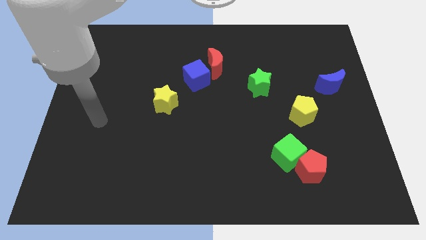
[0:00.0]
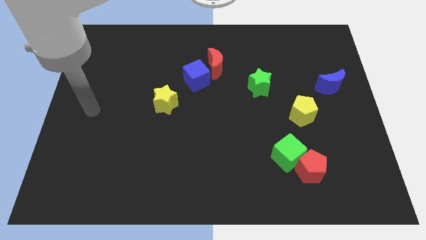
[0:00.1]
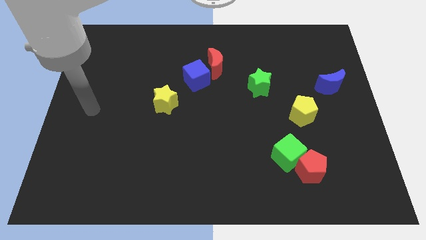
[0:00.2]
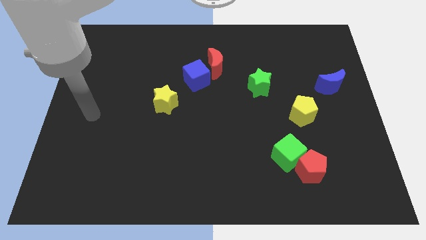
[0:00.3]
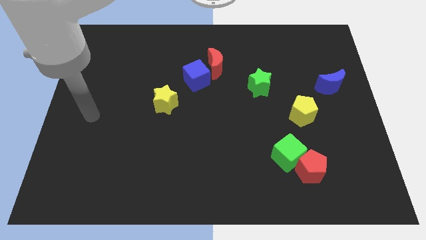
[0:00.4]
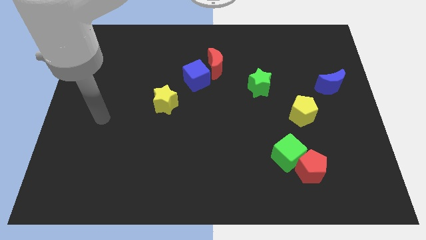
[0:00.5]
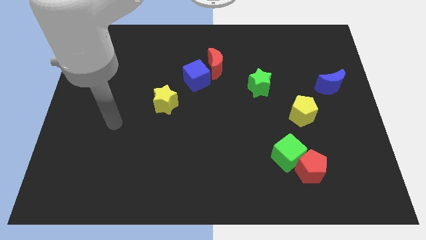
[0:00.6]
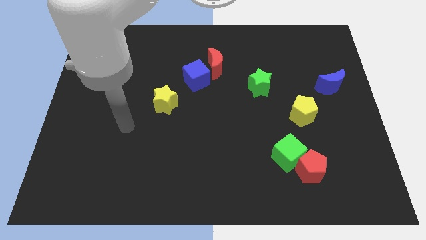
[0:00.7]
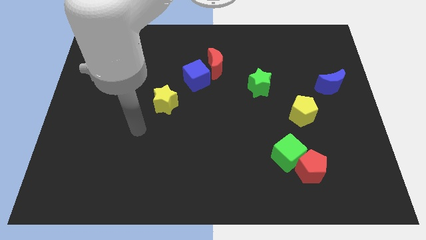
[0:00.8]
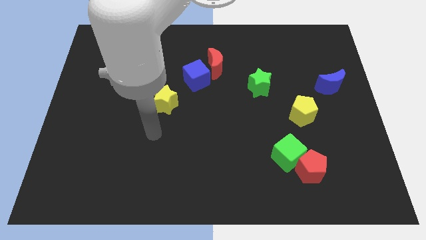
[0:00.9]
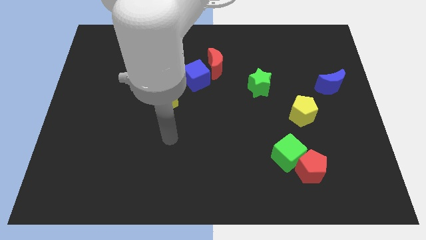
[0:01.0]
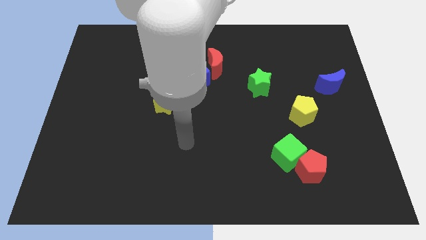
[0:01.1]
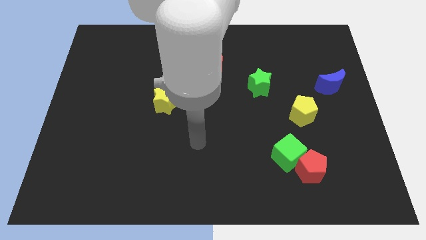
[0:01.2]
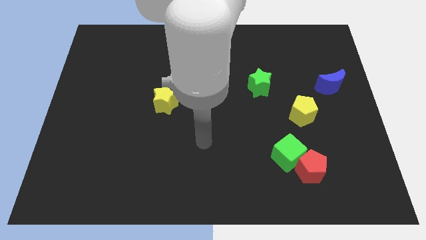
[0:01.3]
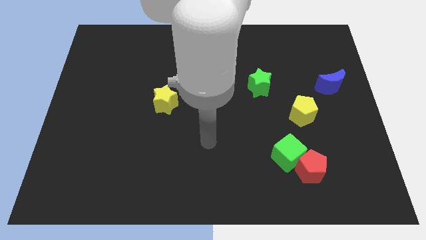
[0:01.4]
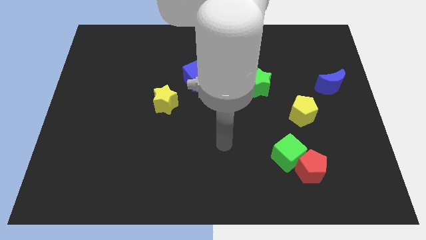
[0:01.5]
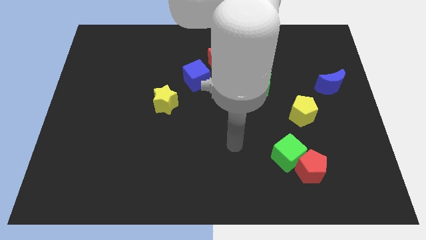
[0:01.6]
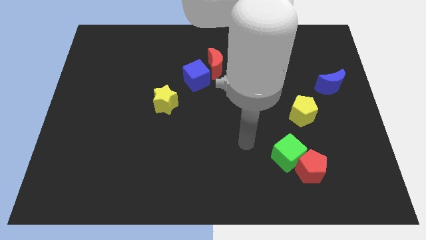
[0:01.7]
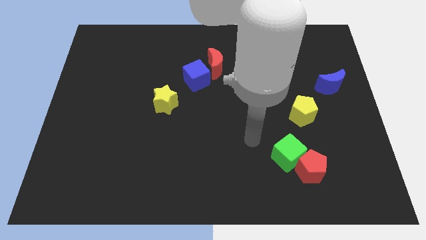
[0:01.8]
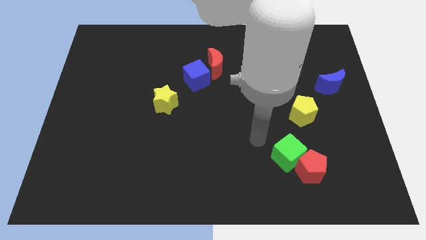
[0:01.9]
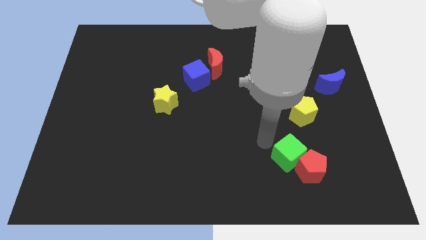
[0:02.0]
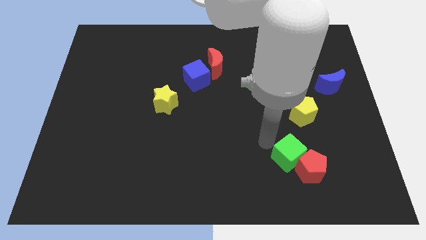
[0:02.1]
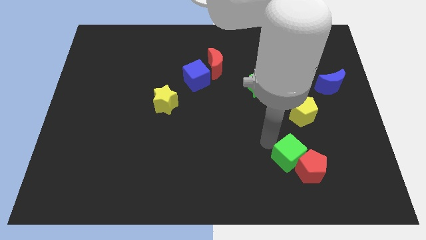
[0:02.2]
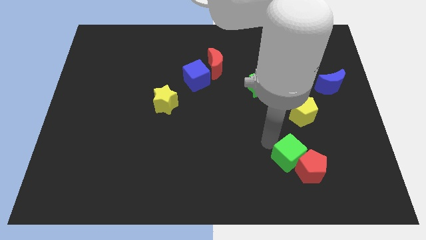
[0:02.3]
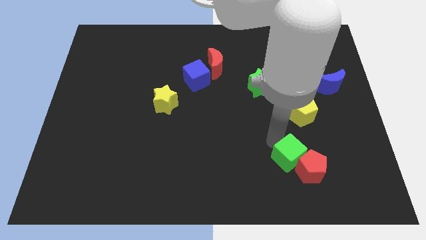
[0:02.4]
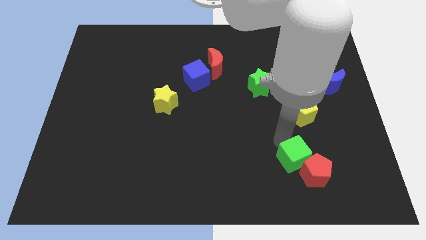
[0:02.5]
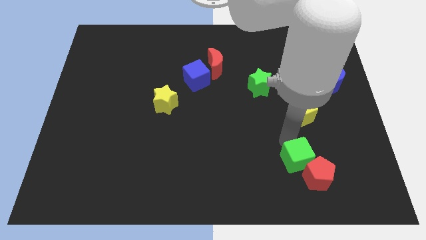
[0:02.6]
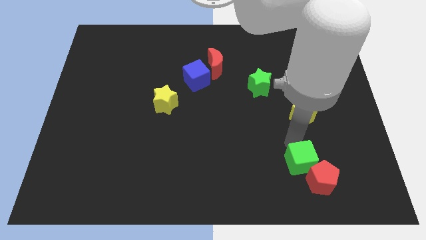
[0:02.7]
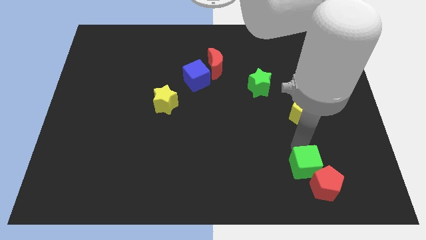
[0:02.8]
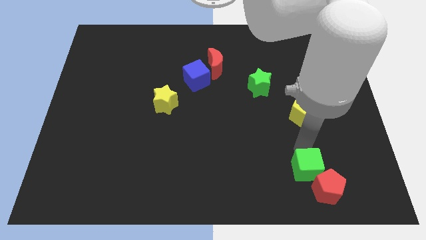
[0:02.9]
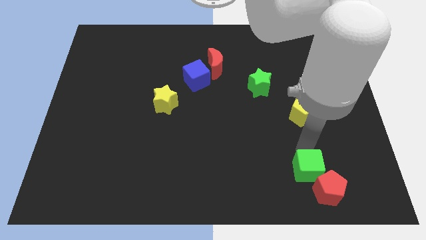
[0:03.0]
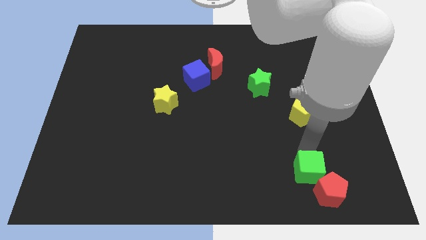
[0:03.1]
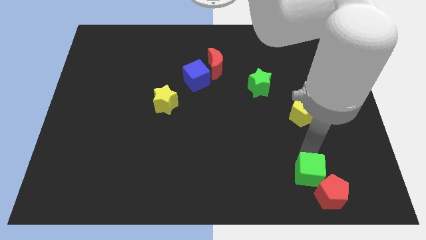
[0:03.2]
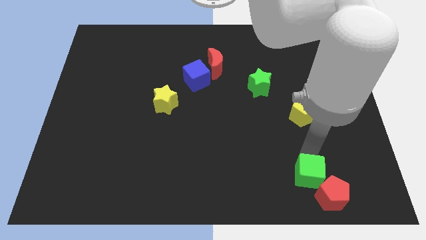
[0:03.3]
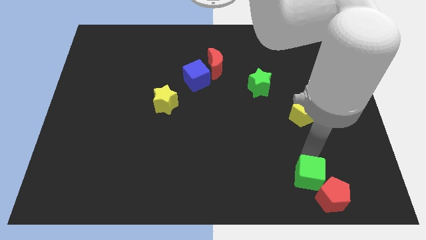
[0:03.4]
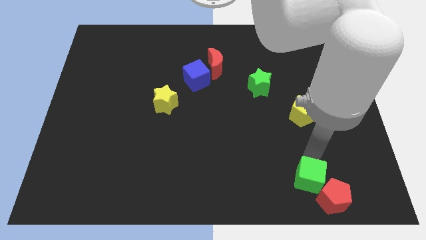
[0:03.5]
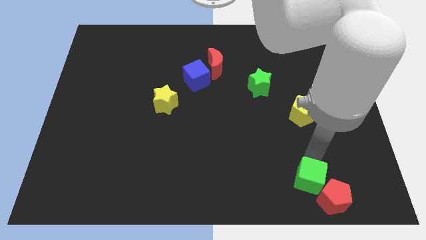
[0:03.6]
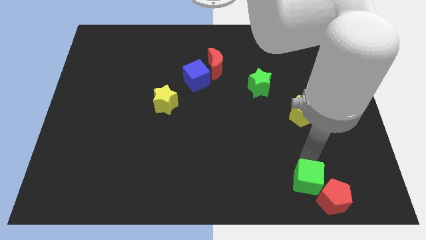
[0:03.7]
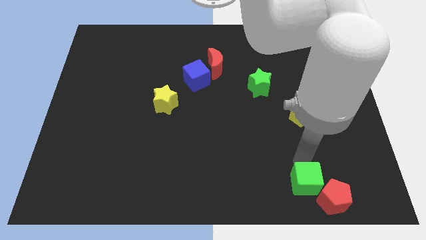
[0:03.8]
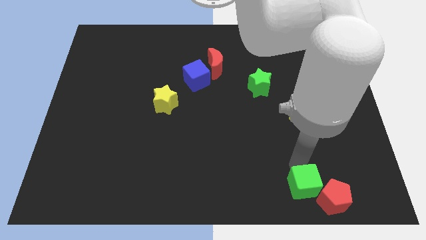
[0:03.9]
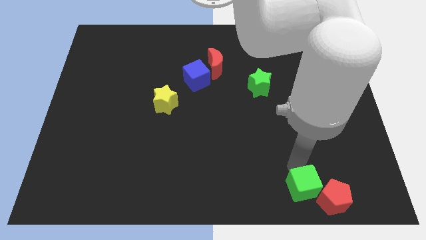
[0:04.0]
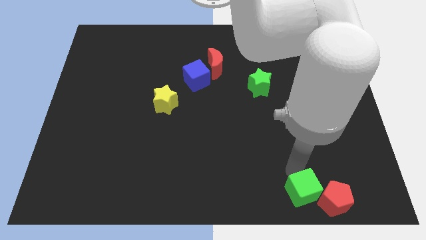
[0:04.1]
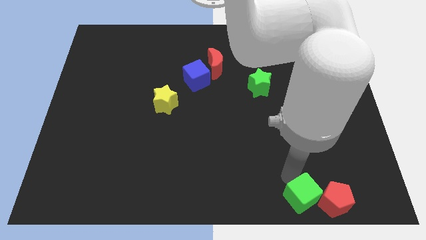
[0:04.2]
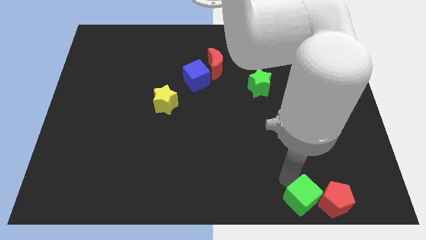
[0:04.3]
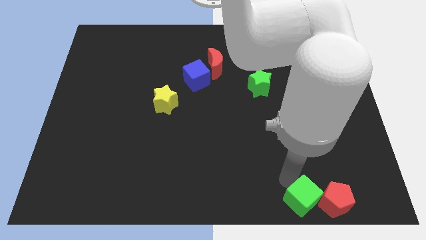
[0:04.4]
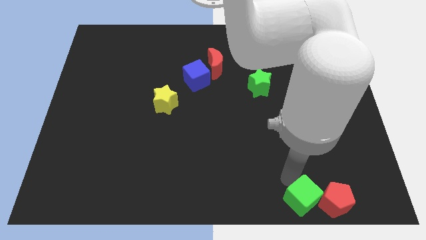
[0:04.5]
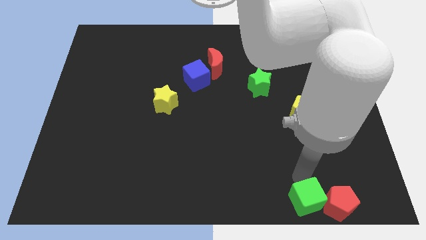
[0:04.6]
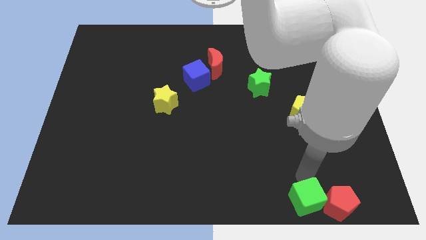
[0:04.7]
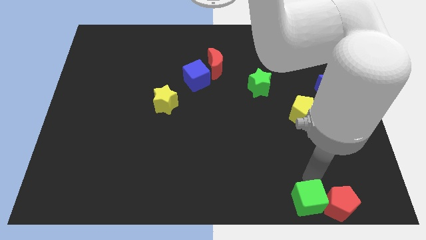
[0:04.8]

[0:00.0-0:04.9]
push green cube and red pentagon downward

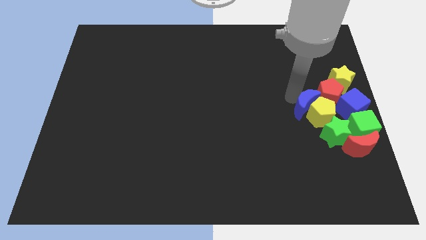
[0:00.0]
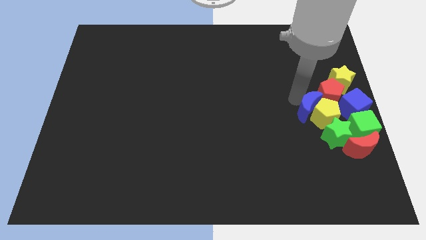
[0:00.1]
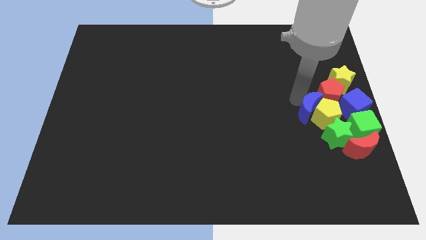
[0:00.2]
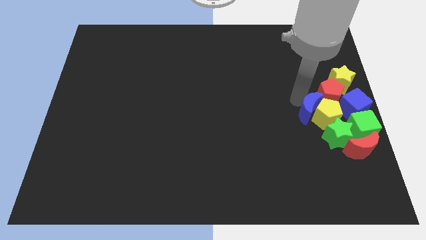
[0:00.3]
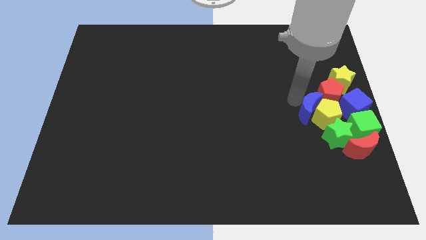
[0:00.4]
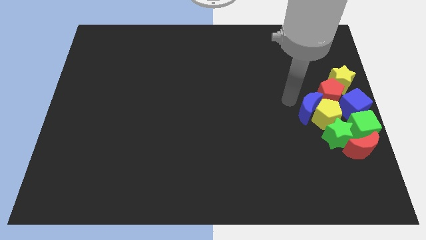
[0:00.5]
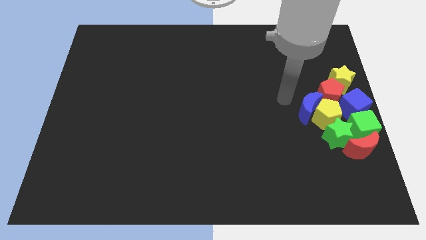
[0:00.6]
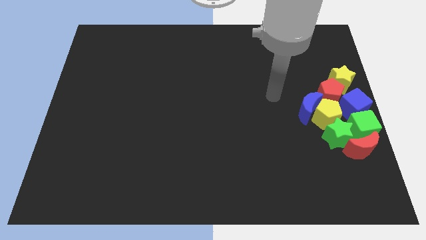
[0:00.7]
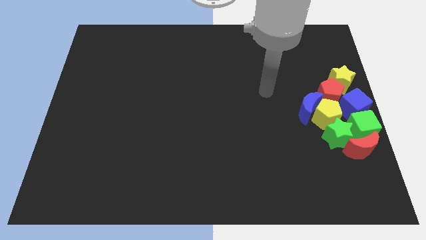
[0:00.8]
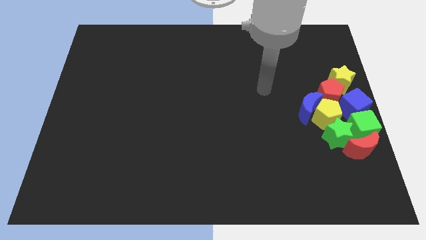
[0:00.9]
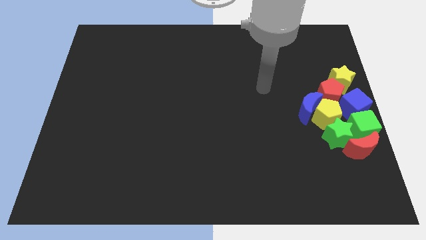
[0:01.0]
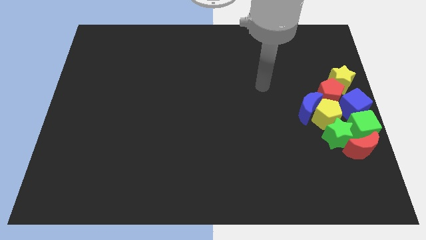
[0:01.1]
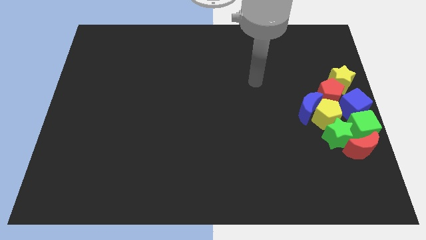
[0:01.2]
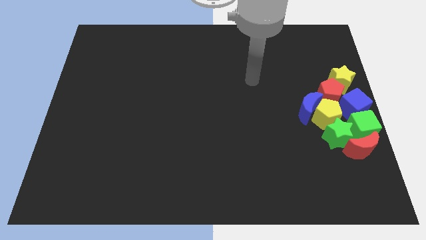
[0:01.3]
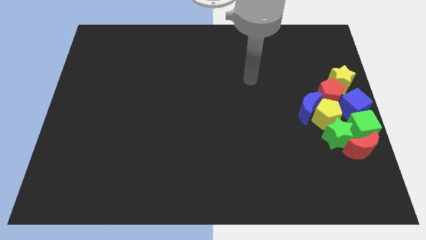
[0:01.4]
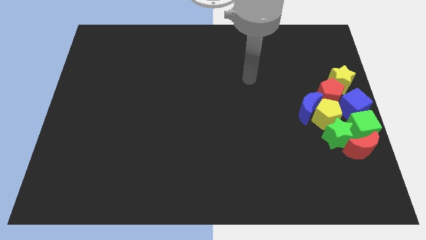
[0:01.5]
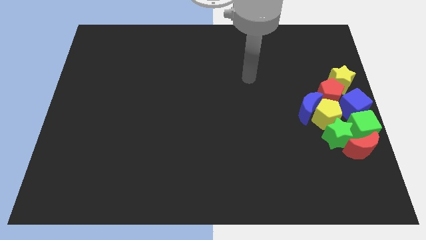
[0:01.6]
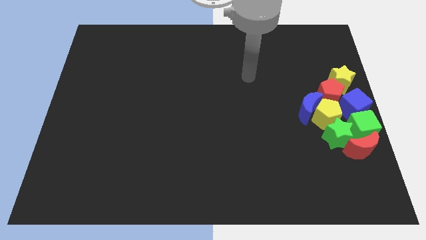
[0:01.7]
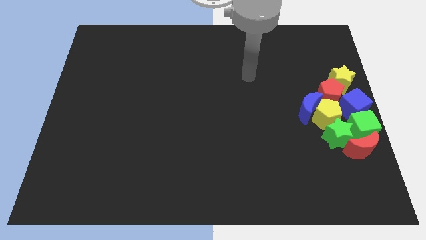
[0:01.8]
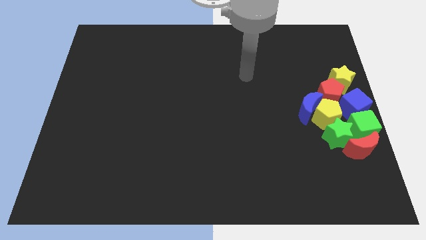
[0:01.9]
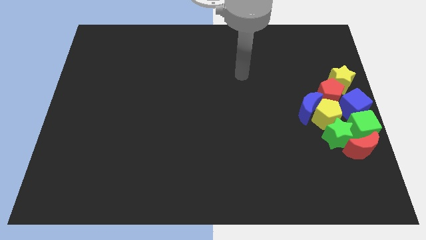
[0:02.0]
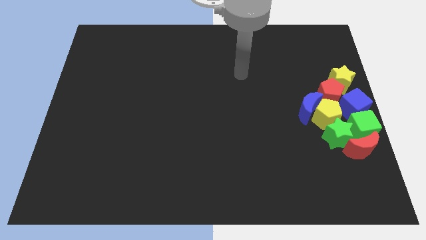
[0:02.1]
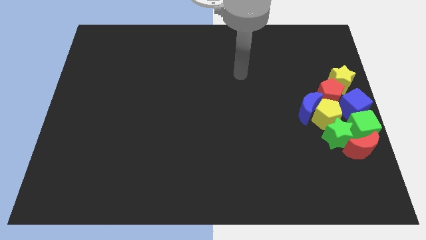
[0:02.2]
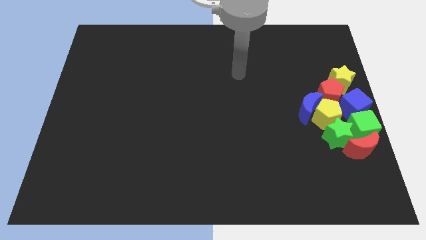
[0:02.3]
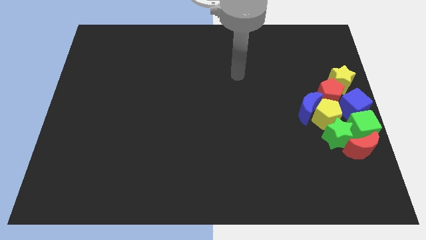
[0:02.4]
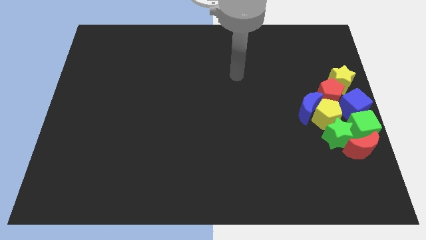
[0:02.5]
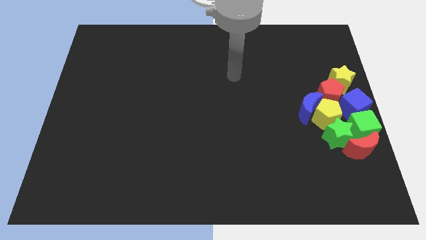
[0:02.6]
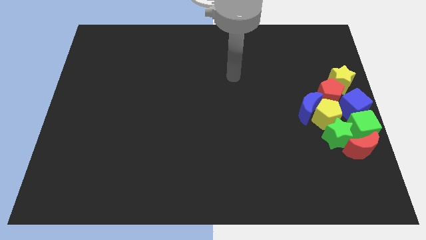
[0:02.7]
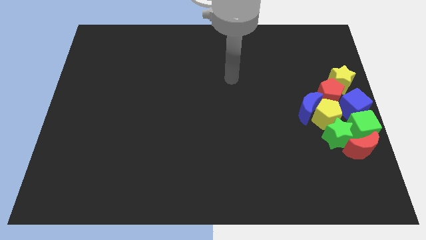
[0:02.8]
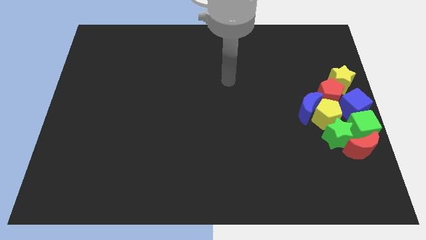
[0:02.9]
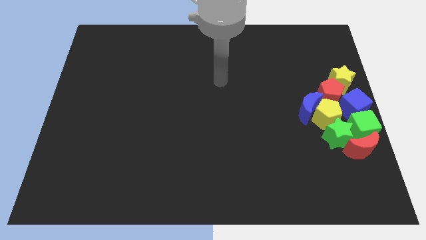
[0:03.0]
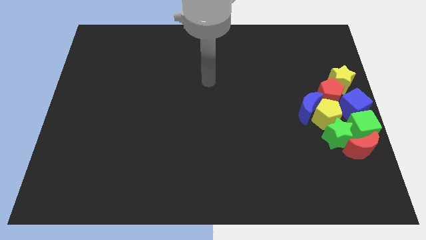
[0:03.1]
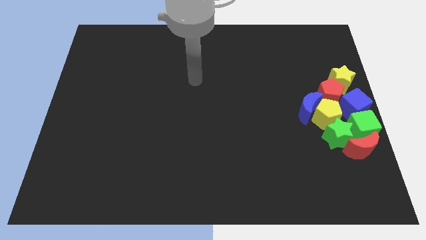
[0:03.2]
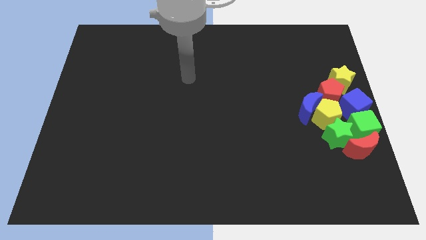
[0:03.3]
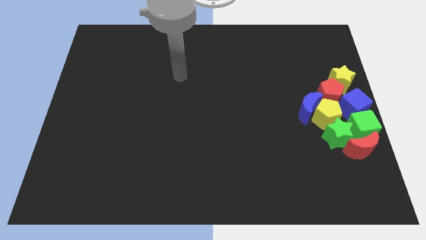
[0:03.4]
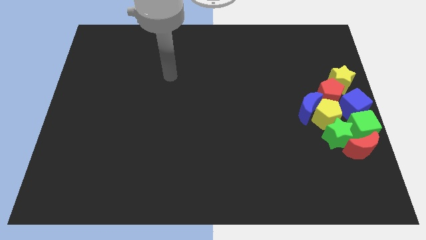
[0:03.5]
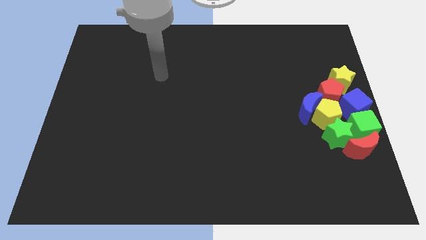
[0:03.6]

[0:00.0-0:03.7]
move the arm away from the blue moon

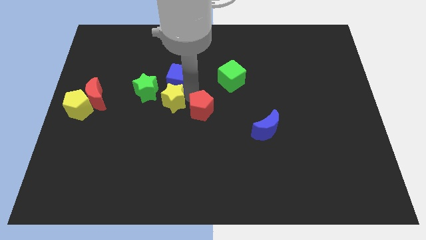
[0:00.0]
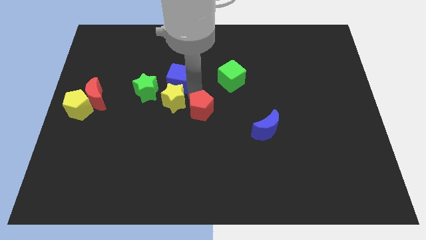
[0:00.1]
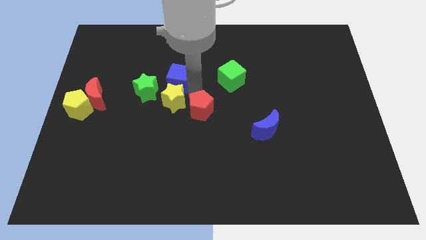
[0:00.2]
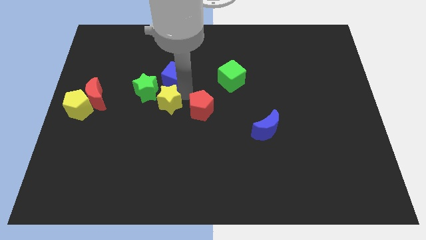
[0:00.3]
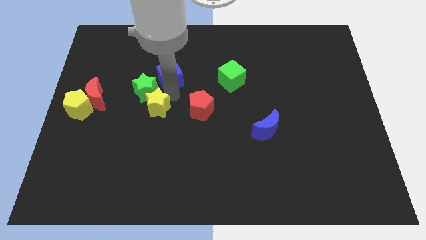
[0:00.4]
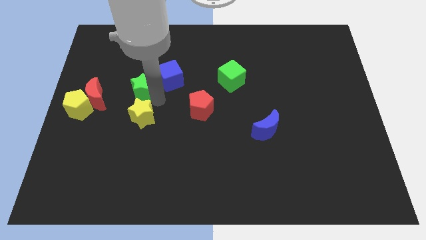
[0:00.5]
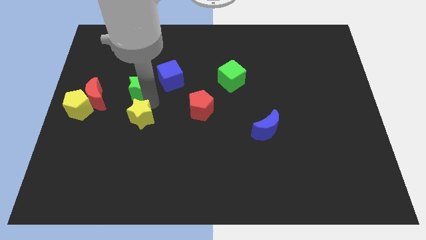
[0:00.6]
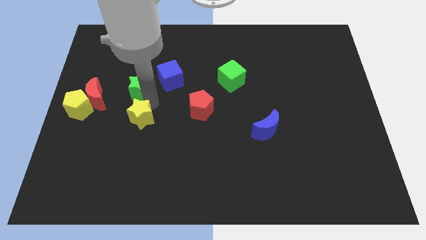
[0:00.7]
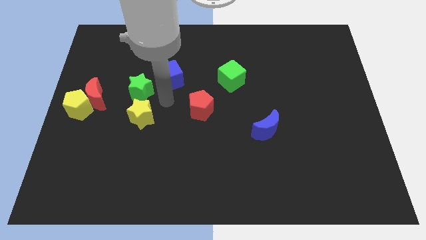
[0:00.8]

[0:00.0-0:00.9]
push the yellow star to the bottom of the green star
